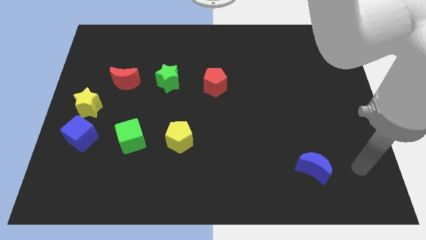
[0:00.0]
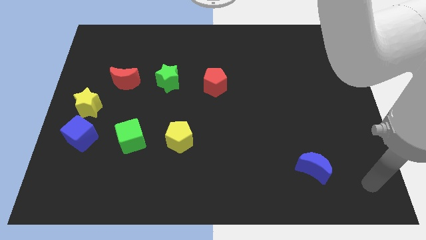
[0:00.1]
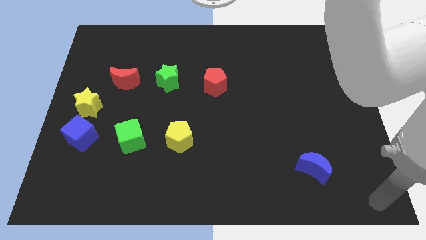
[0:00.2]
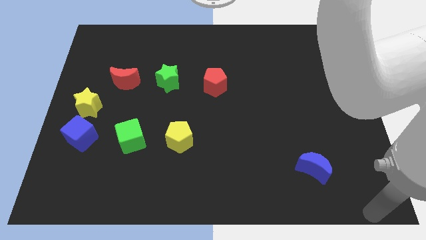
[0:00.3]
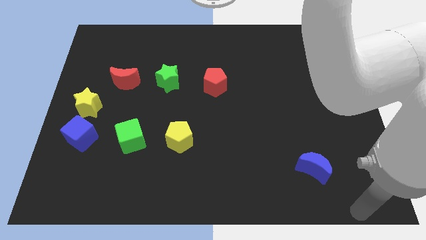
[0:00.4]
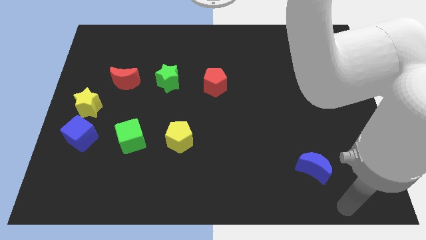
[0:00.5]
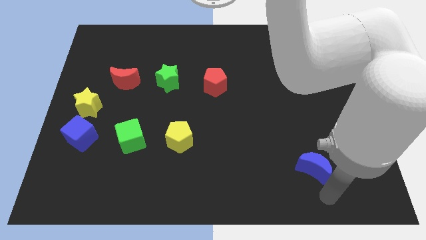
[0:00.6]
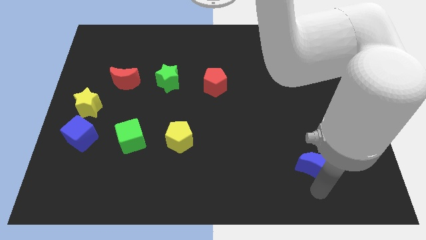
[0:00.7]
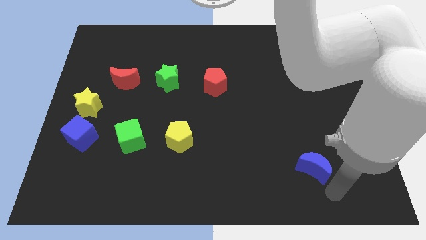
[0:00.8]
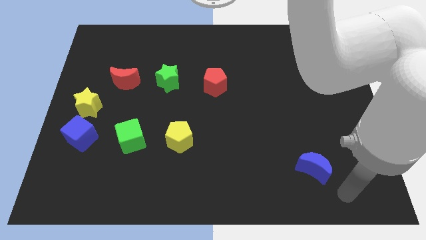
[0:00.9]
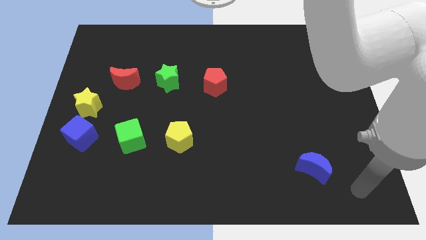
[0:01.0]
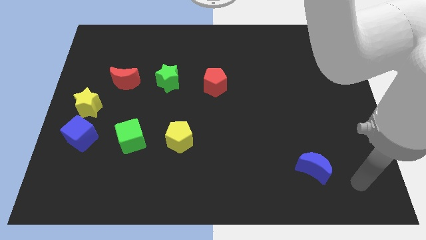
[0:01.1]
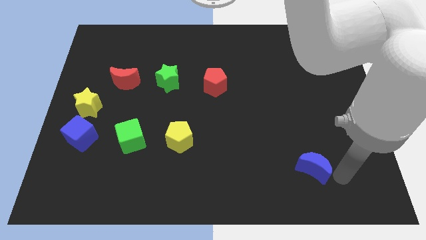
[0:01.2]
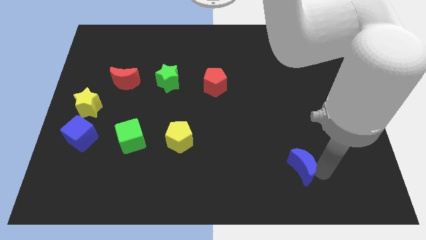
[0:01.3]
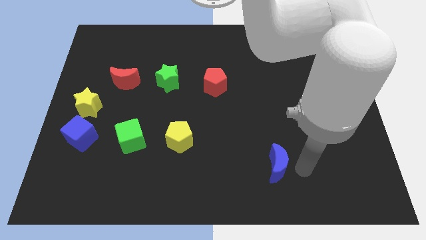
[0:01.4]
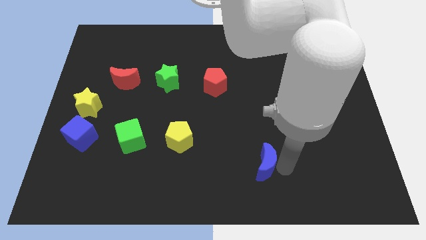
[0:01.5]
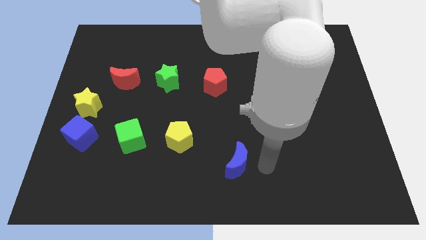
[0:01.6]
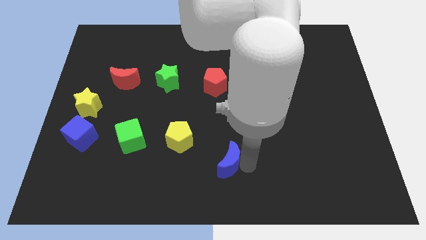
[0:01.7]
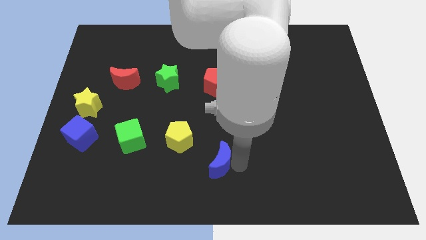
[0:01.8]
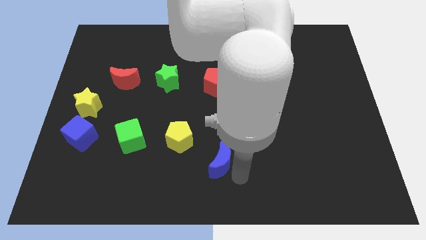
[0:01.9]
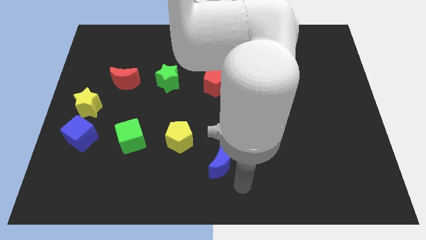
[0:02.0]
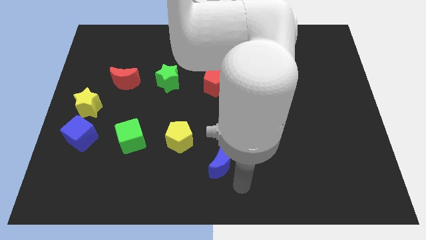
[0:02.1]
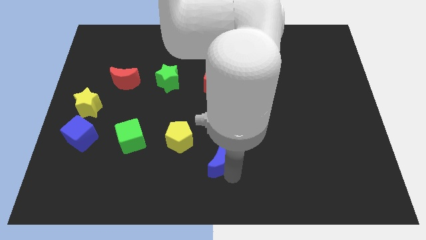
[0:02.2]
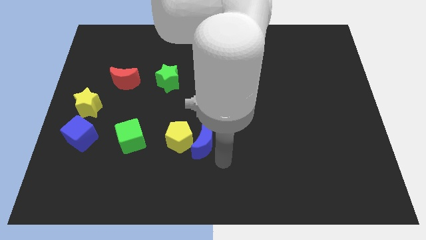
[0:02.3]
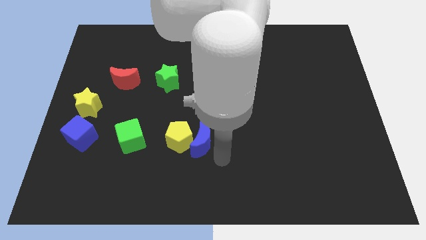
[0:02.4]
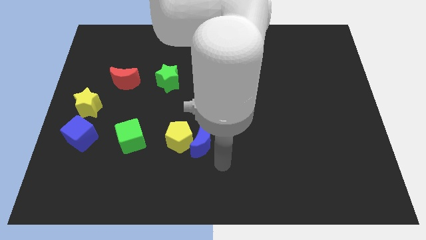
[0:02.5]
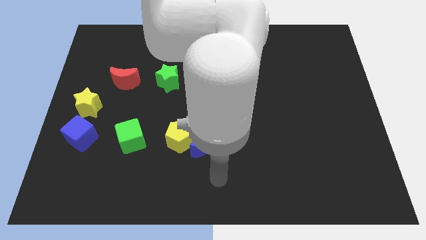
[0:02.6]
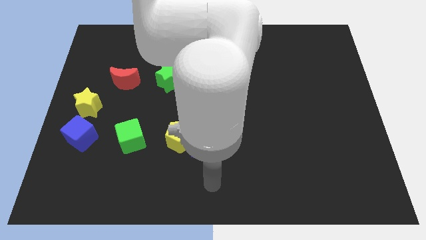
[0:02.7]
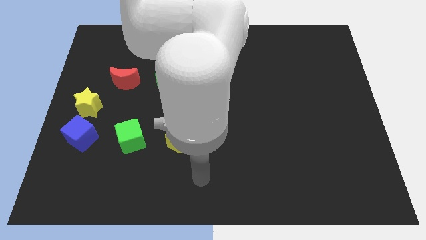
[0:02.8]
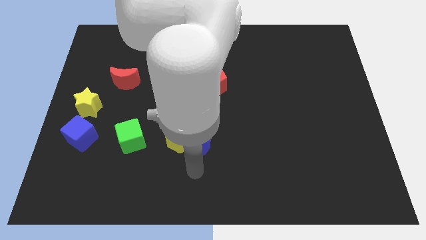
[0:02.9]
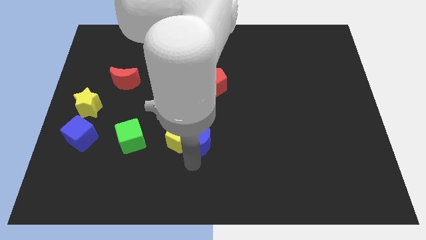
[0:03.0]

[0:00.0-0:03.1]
push the blue moon into the yellow pentagon

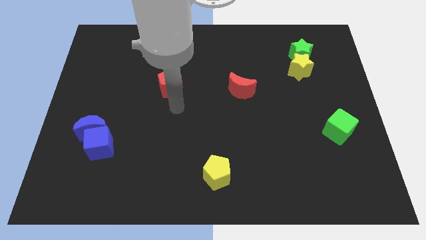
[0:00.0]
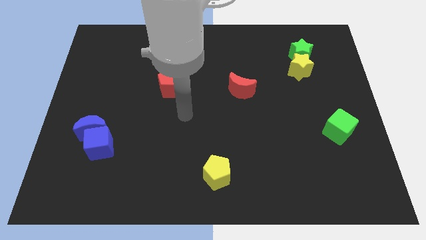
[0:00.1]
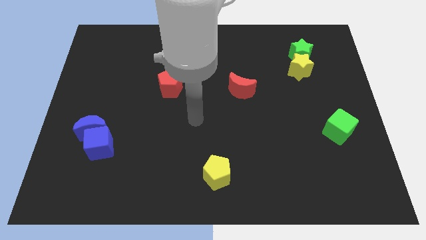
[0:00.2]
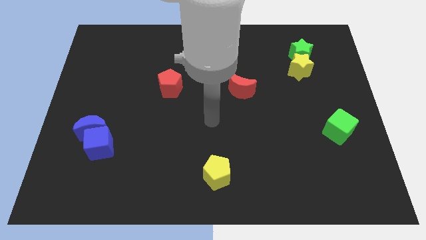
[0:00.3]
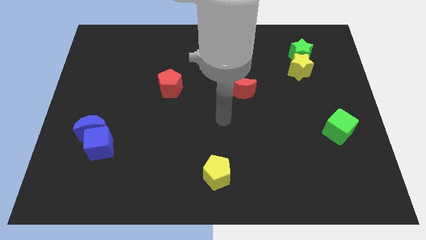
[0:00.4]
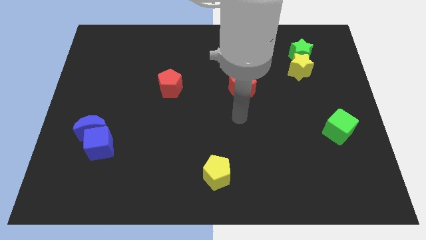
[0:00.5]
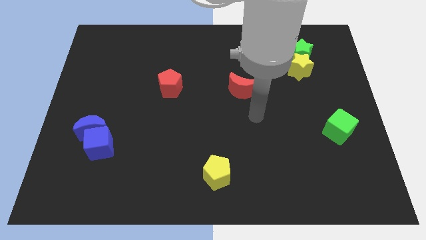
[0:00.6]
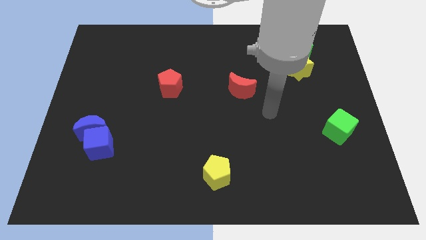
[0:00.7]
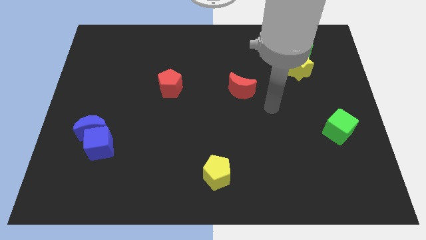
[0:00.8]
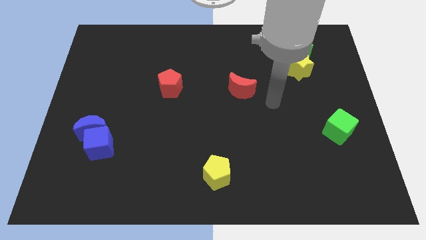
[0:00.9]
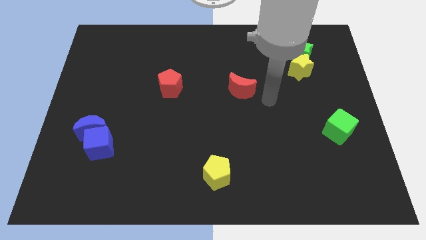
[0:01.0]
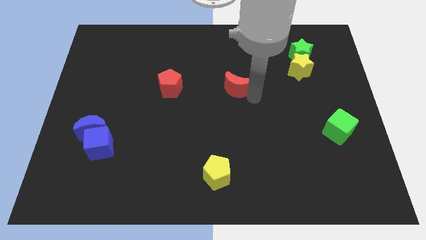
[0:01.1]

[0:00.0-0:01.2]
move your arm to the right of the red crescent

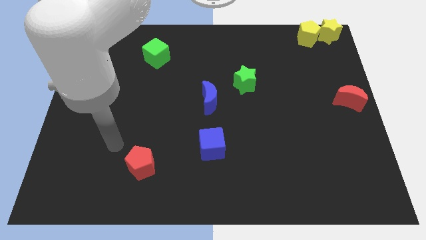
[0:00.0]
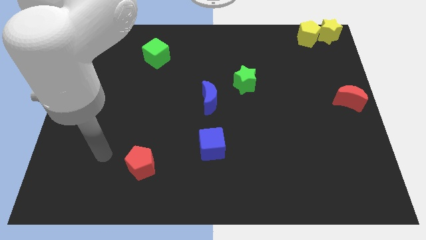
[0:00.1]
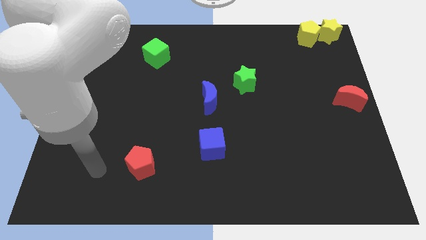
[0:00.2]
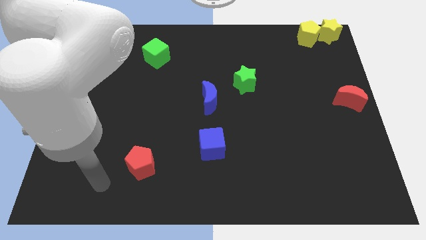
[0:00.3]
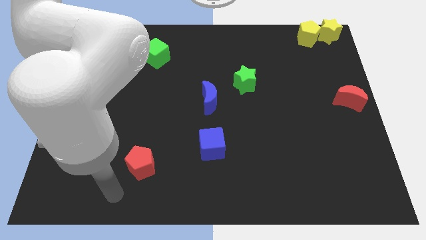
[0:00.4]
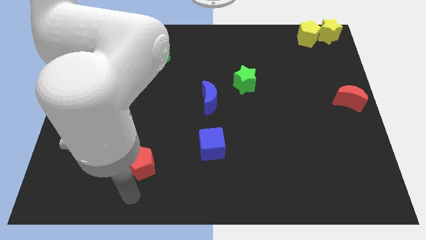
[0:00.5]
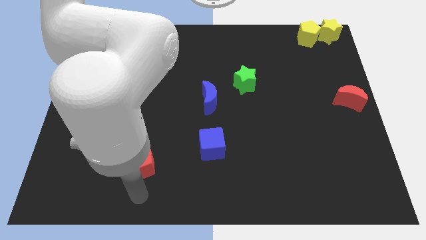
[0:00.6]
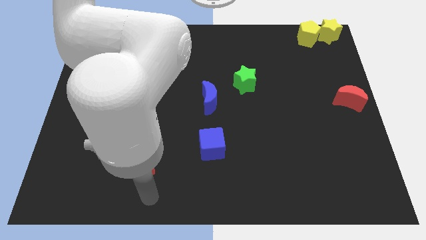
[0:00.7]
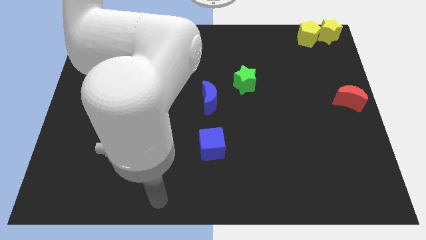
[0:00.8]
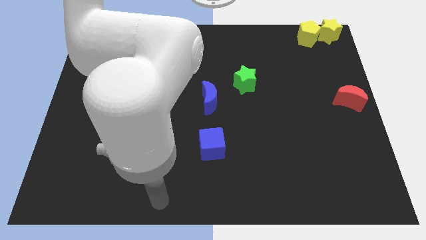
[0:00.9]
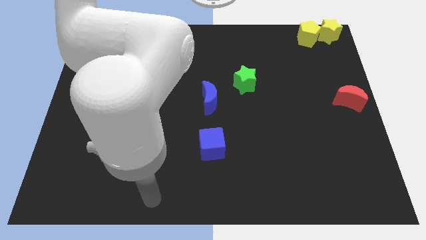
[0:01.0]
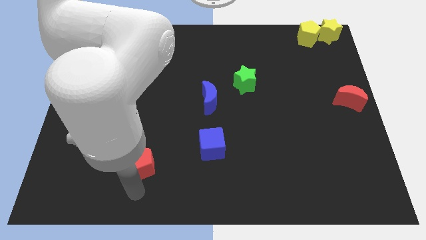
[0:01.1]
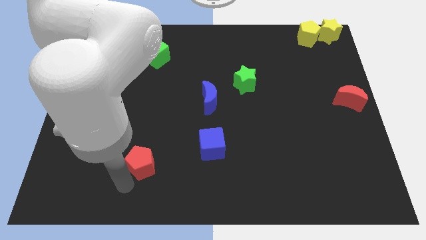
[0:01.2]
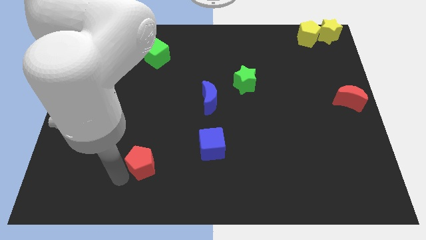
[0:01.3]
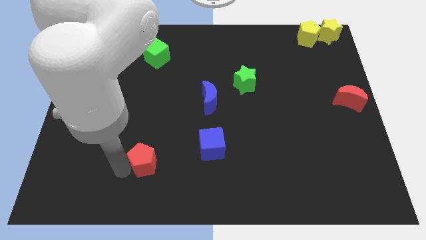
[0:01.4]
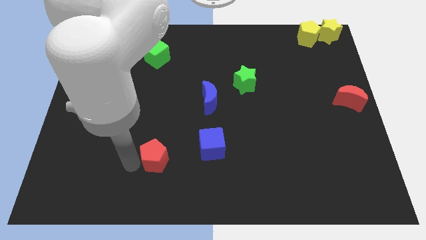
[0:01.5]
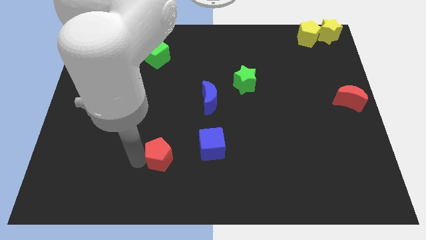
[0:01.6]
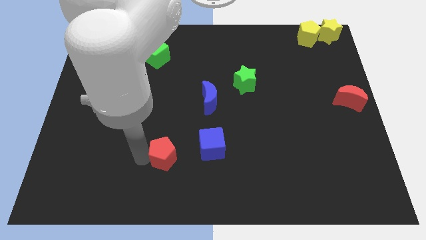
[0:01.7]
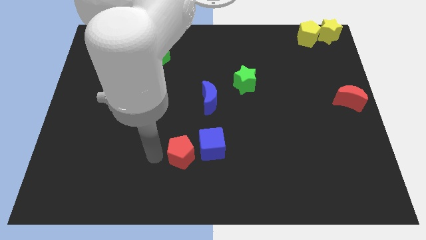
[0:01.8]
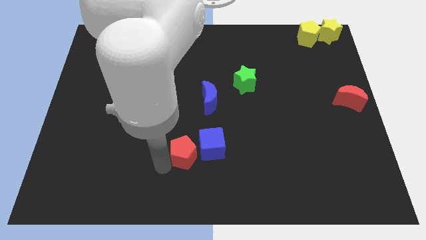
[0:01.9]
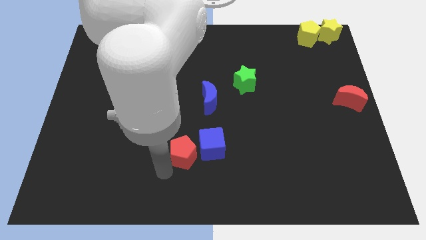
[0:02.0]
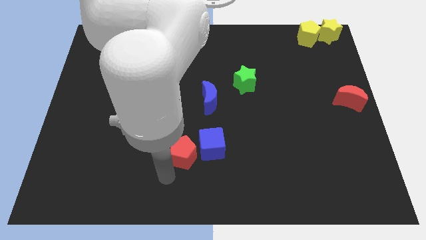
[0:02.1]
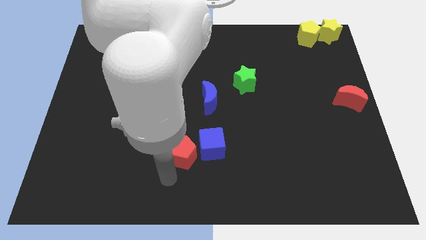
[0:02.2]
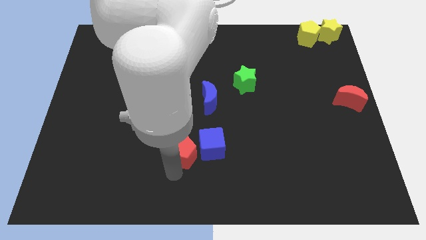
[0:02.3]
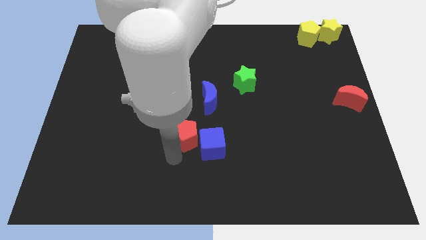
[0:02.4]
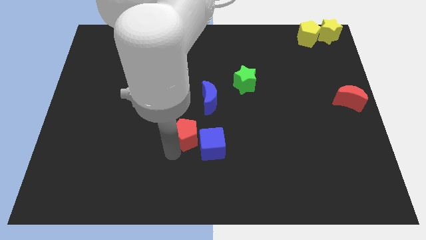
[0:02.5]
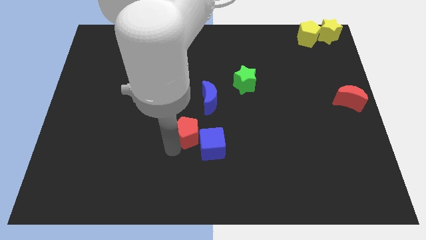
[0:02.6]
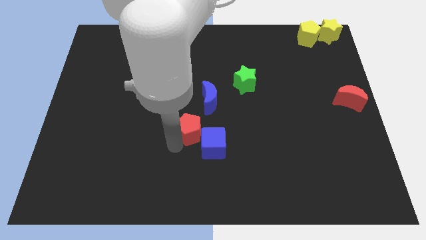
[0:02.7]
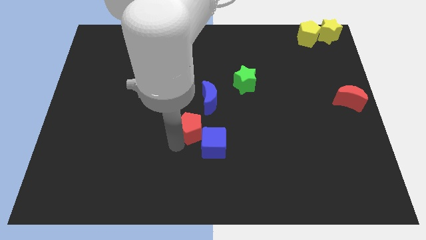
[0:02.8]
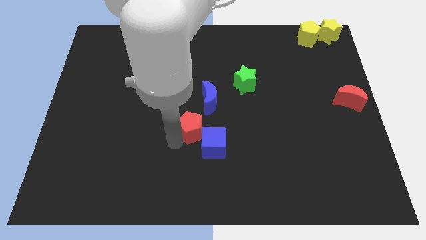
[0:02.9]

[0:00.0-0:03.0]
move the red pentagon to the top left of blue cube

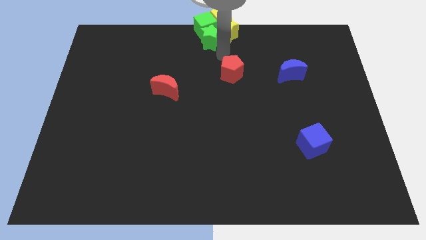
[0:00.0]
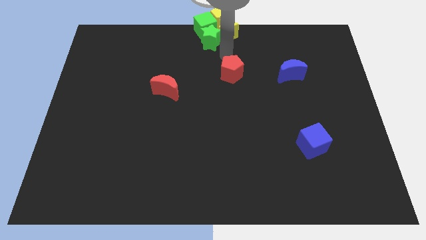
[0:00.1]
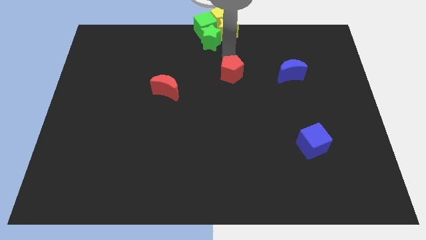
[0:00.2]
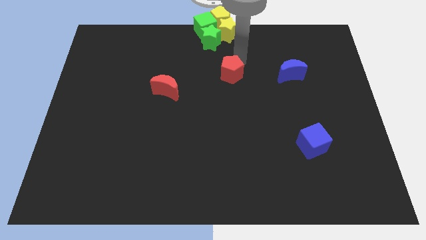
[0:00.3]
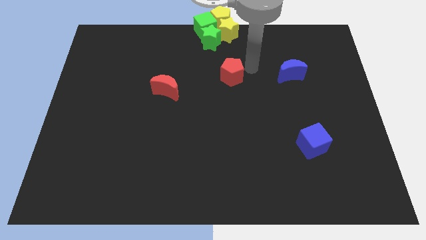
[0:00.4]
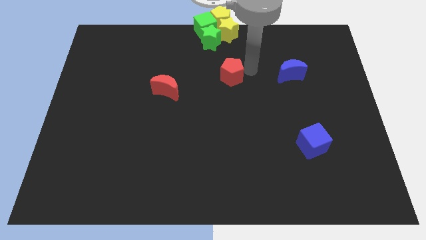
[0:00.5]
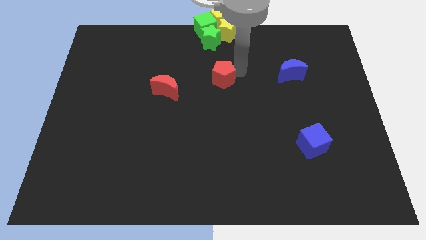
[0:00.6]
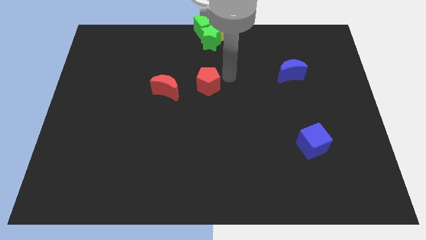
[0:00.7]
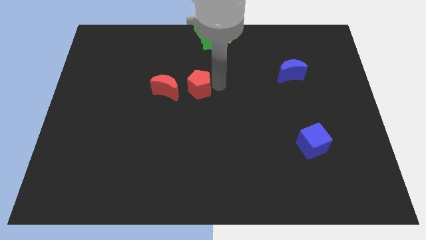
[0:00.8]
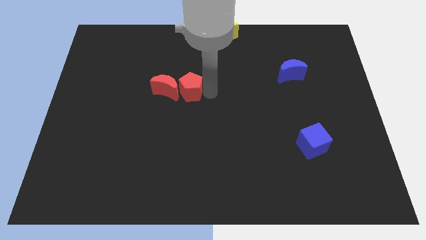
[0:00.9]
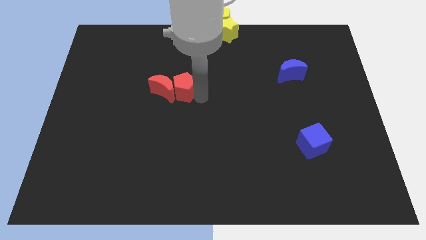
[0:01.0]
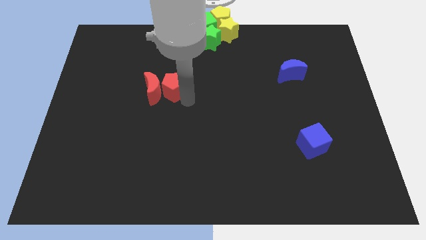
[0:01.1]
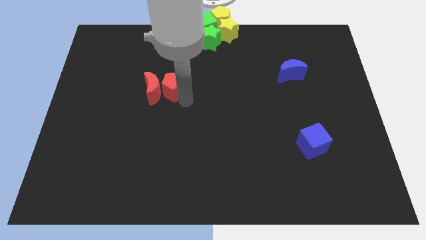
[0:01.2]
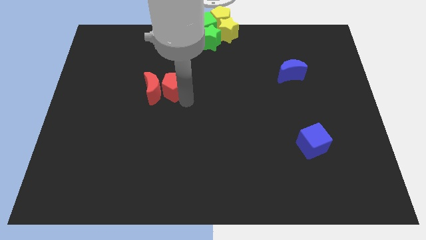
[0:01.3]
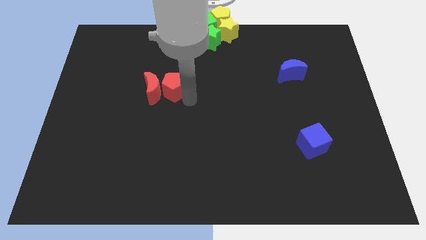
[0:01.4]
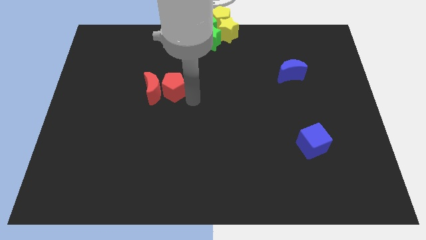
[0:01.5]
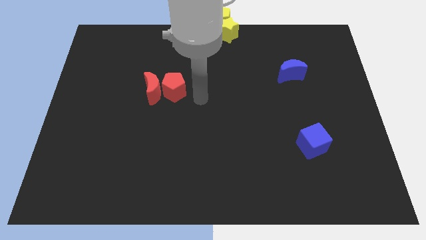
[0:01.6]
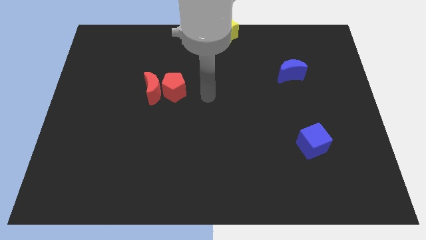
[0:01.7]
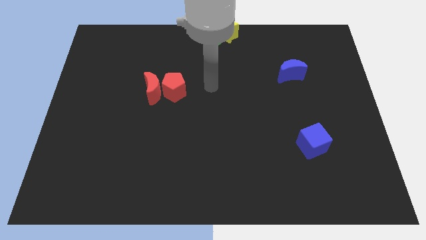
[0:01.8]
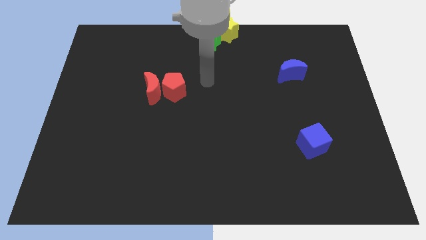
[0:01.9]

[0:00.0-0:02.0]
put red pentagon into the red moon
